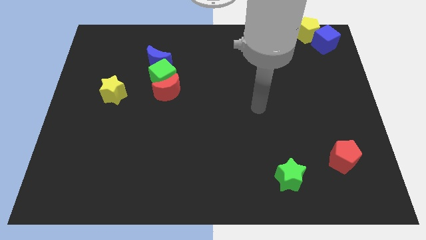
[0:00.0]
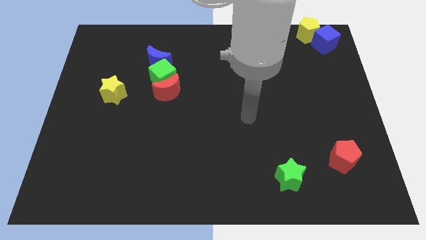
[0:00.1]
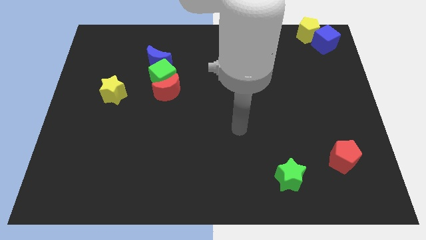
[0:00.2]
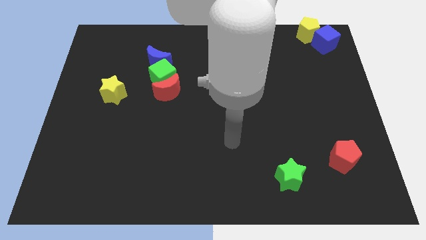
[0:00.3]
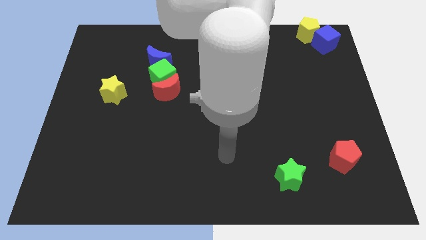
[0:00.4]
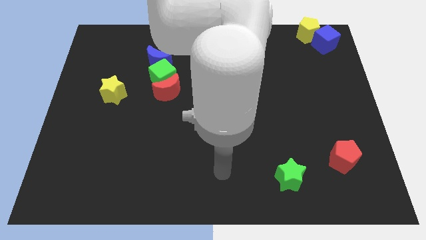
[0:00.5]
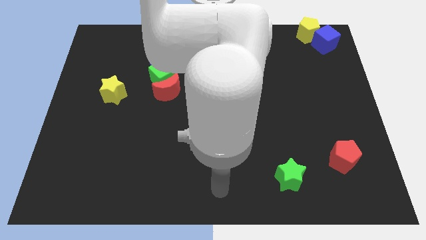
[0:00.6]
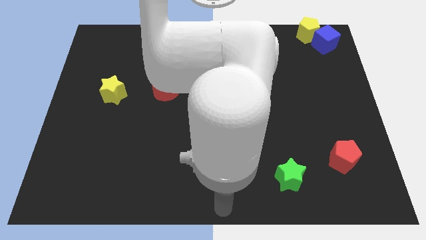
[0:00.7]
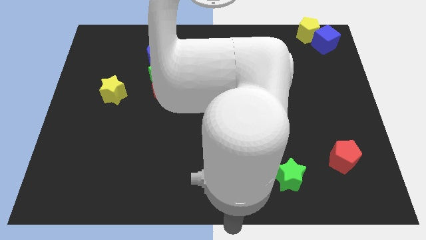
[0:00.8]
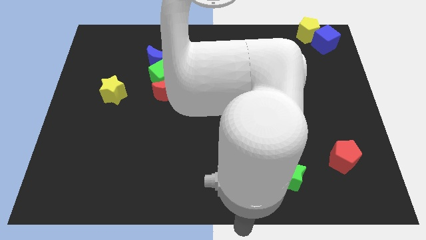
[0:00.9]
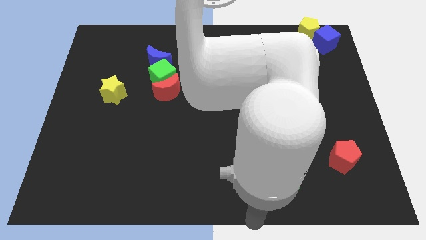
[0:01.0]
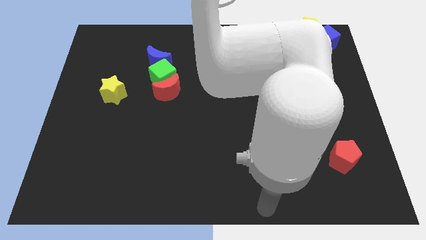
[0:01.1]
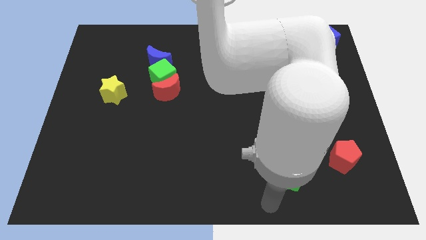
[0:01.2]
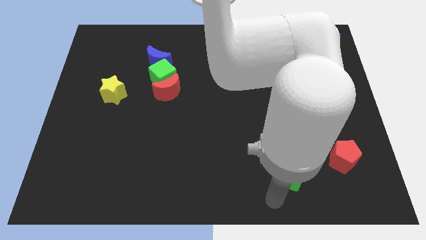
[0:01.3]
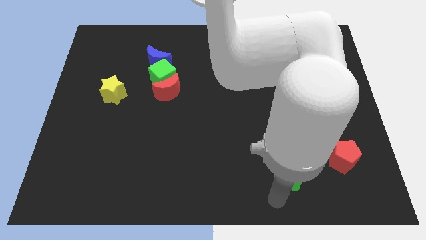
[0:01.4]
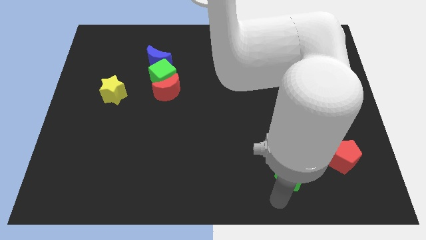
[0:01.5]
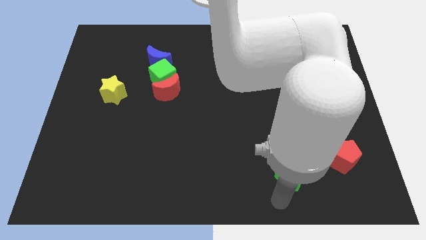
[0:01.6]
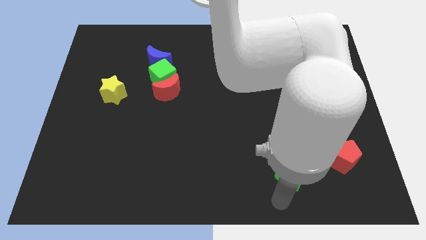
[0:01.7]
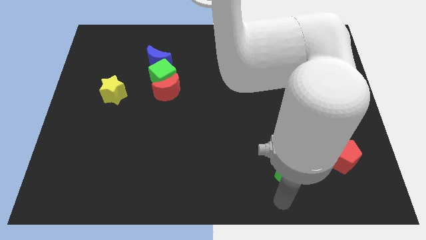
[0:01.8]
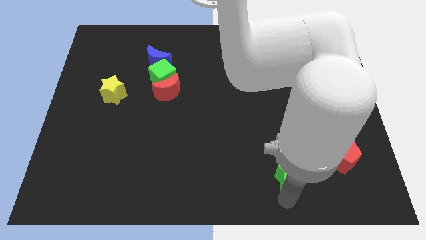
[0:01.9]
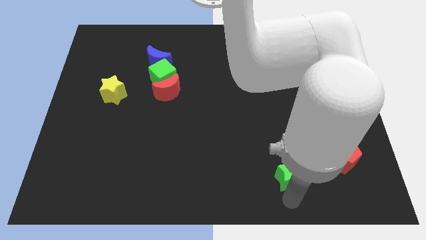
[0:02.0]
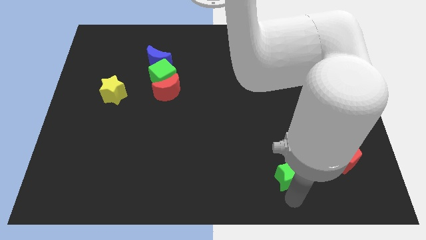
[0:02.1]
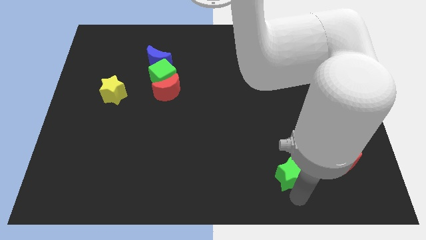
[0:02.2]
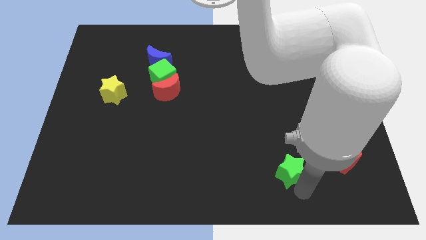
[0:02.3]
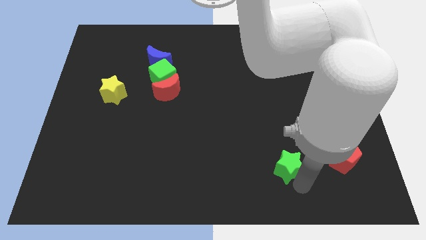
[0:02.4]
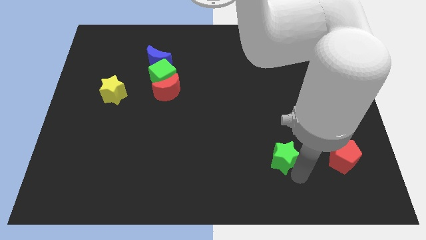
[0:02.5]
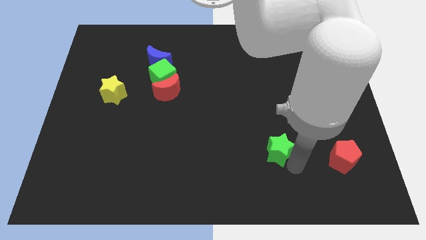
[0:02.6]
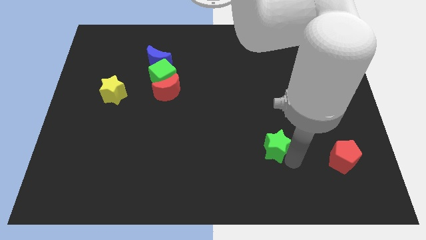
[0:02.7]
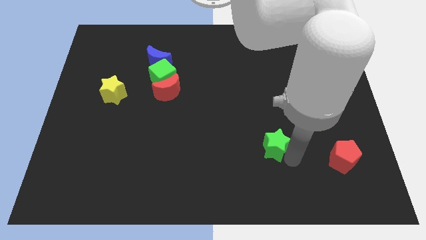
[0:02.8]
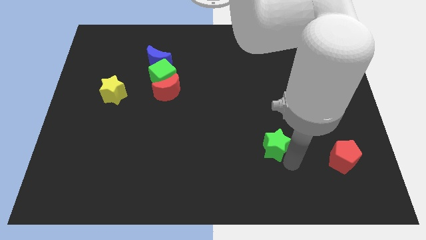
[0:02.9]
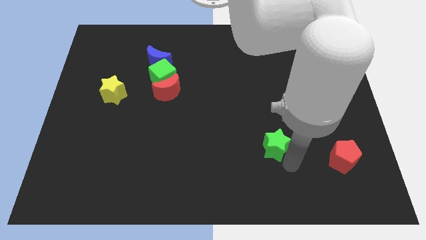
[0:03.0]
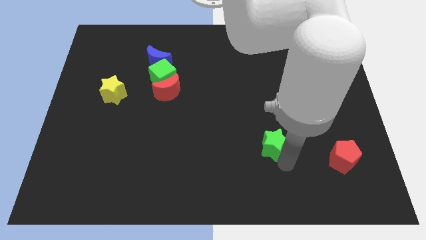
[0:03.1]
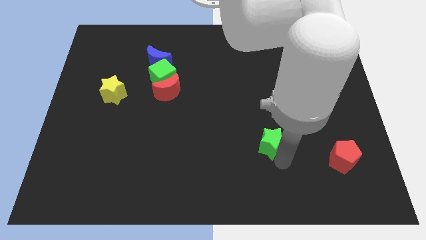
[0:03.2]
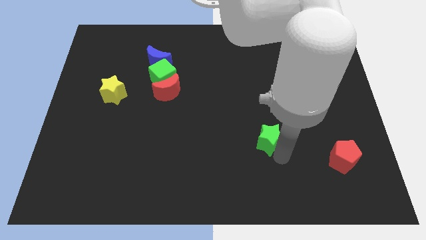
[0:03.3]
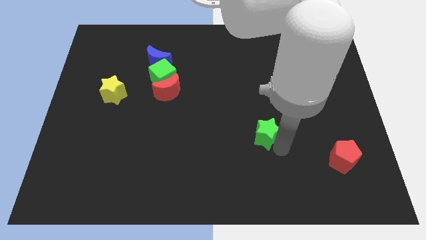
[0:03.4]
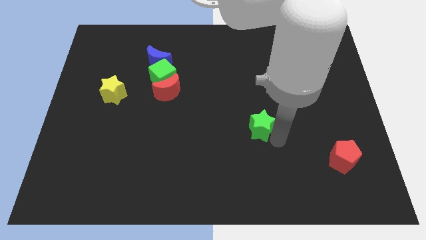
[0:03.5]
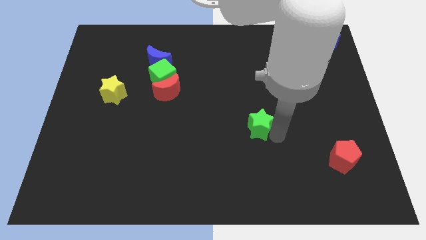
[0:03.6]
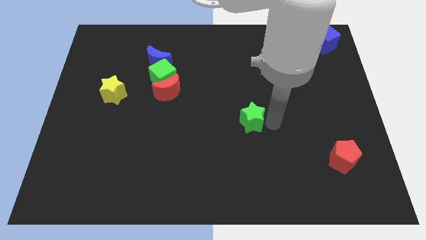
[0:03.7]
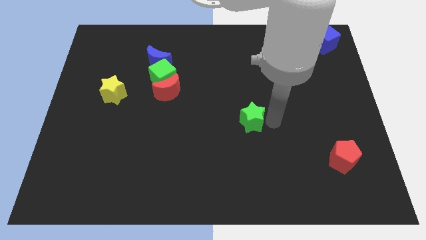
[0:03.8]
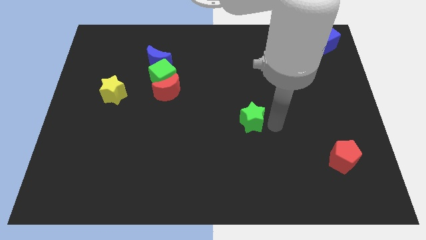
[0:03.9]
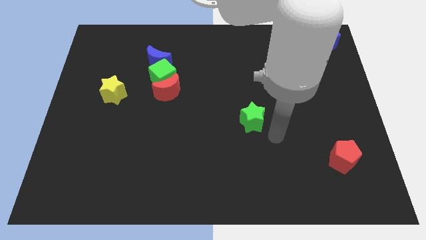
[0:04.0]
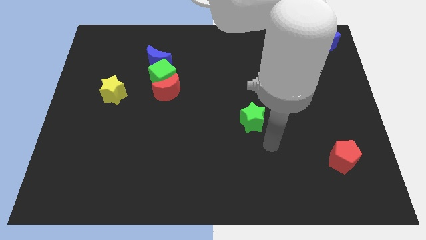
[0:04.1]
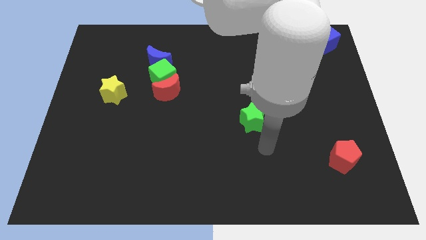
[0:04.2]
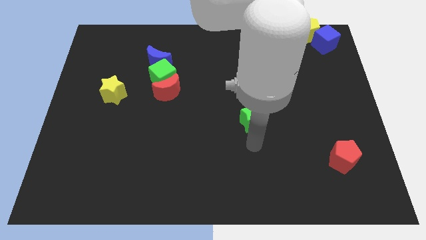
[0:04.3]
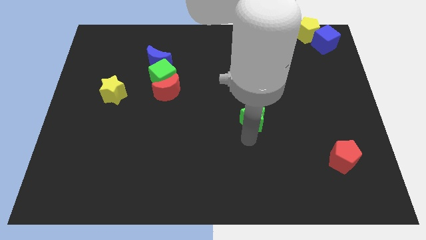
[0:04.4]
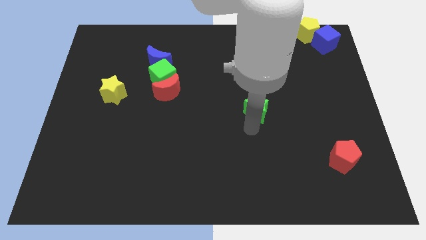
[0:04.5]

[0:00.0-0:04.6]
place the green star in between red moon and red pentagon

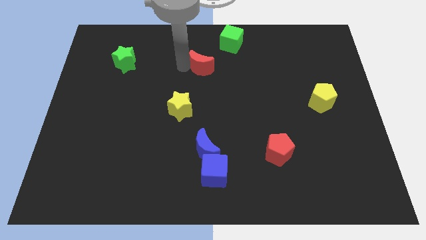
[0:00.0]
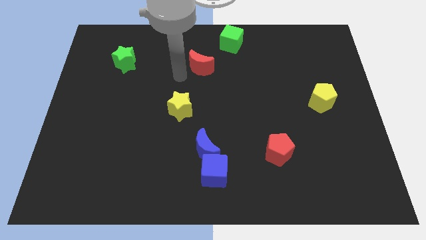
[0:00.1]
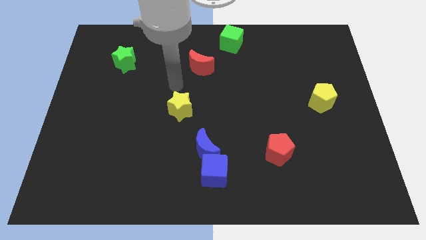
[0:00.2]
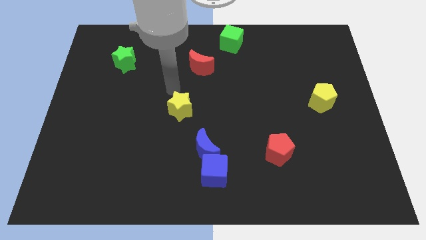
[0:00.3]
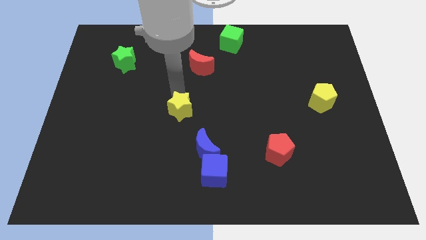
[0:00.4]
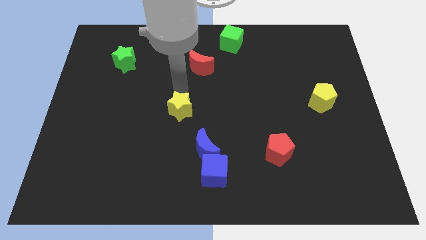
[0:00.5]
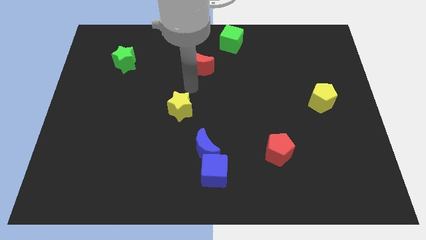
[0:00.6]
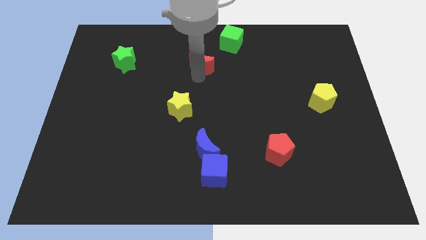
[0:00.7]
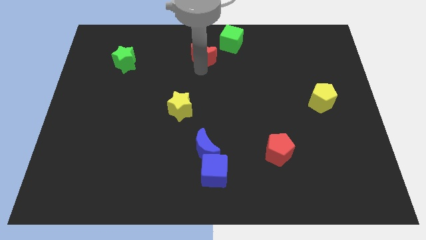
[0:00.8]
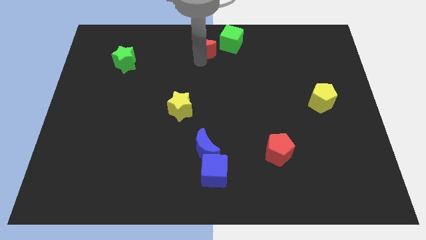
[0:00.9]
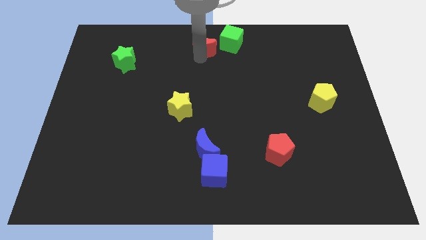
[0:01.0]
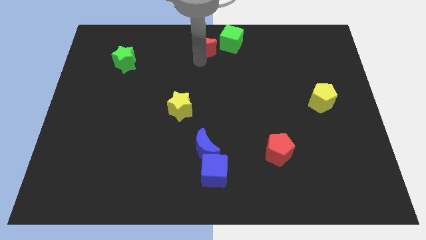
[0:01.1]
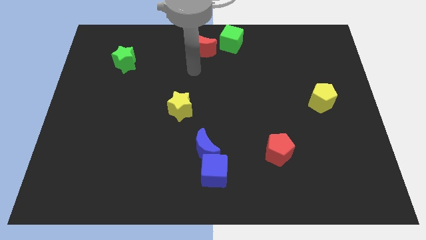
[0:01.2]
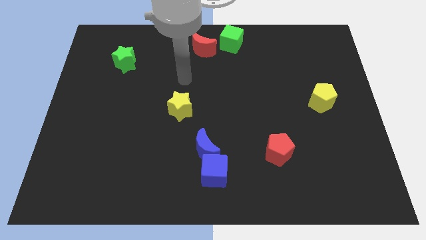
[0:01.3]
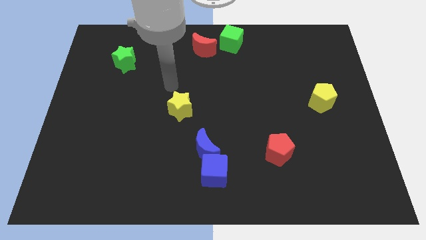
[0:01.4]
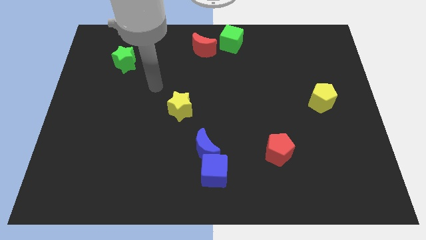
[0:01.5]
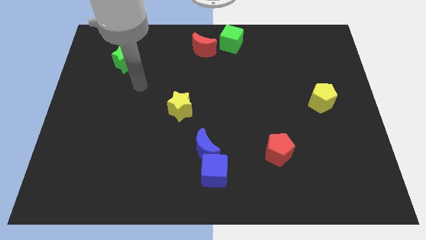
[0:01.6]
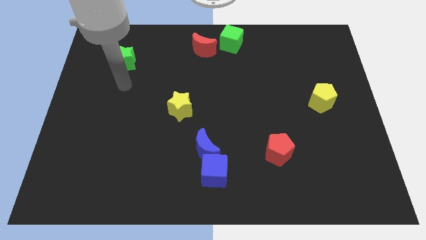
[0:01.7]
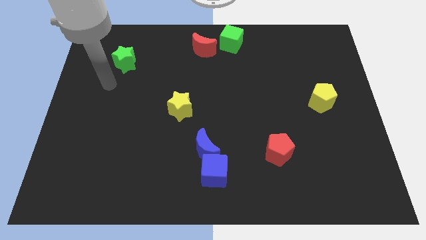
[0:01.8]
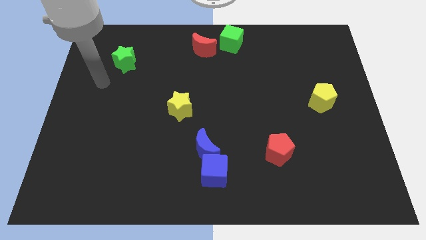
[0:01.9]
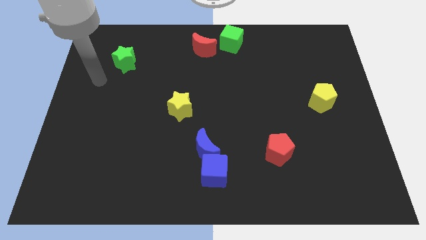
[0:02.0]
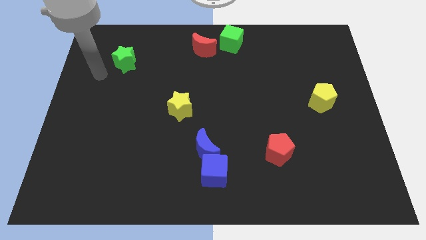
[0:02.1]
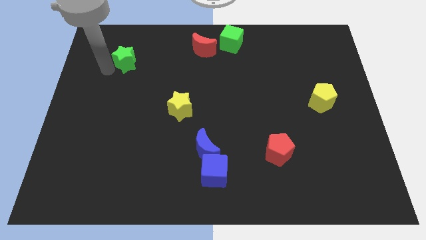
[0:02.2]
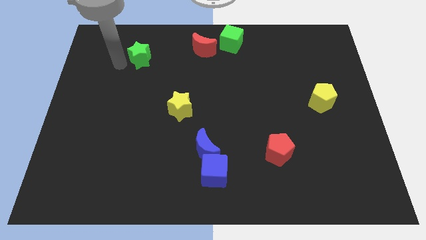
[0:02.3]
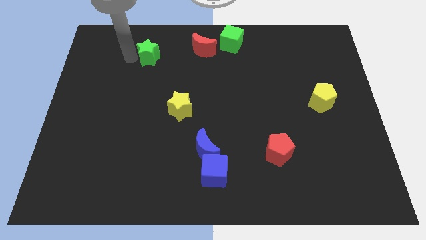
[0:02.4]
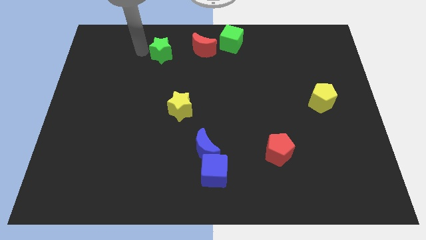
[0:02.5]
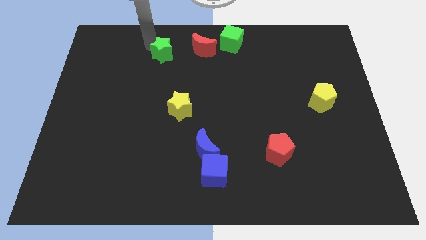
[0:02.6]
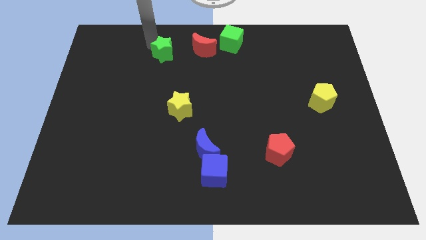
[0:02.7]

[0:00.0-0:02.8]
move the green star diagonal to the yellow star

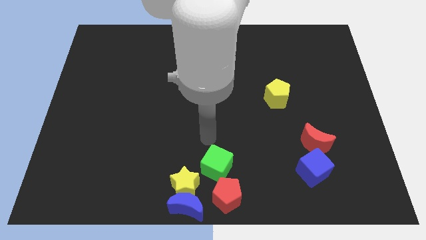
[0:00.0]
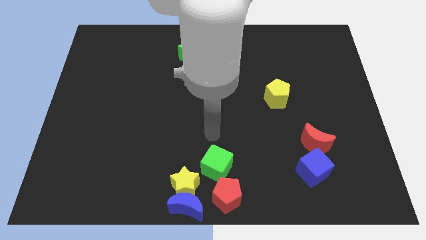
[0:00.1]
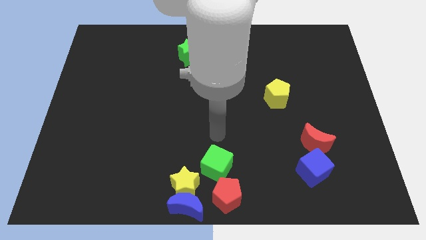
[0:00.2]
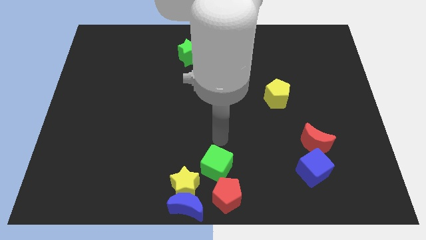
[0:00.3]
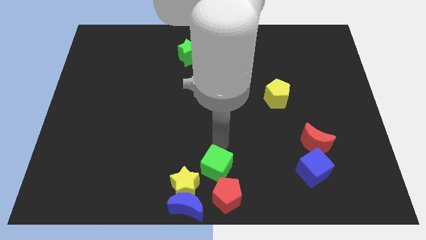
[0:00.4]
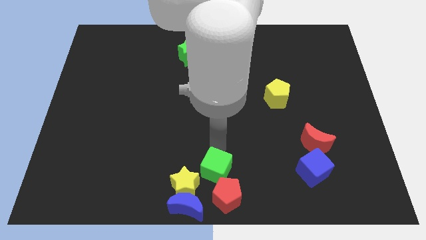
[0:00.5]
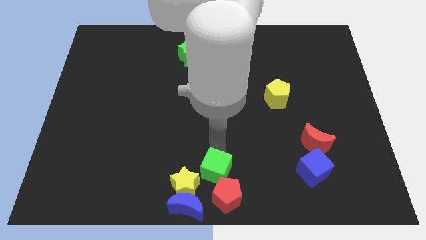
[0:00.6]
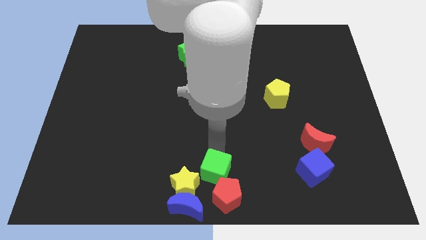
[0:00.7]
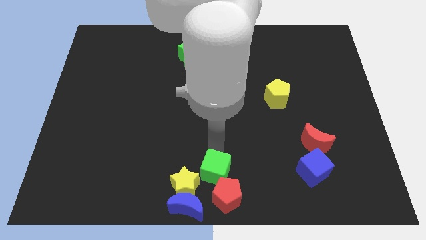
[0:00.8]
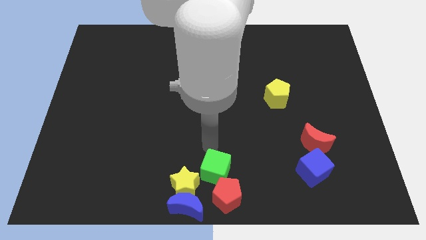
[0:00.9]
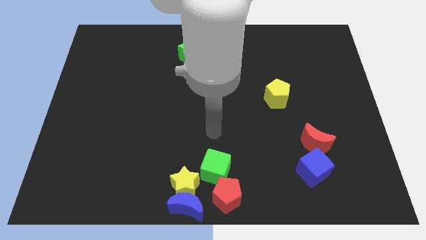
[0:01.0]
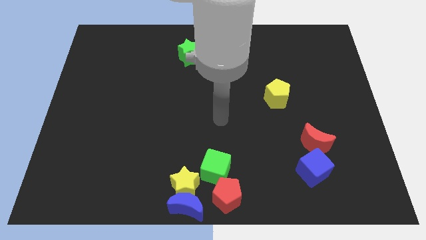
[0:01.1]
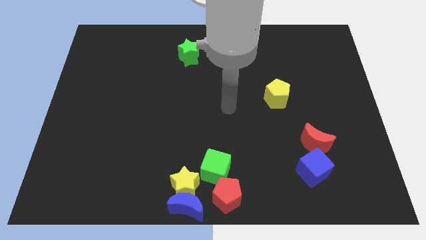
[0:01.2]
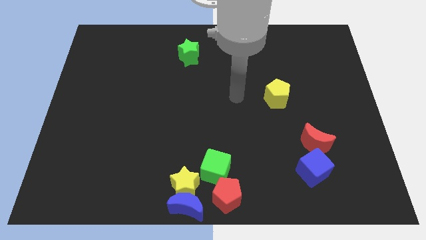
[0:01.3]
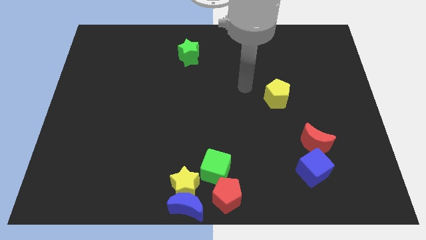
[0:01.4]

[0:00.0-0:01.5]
move the arm away from green cube
